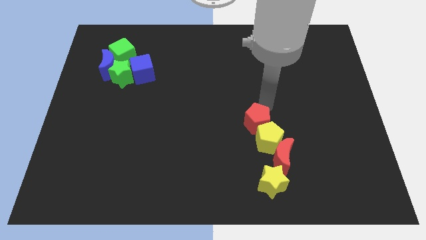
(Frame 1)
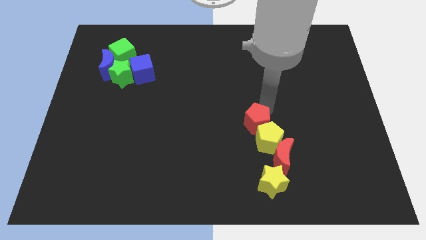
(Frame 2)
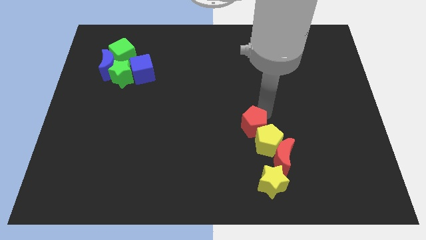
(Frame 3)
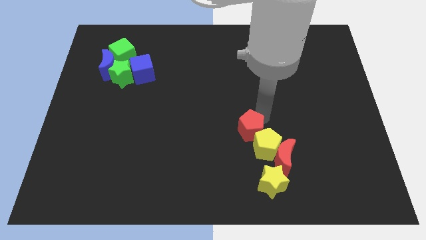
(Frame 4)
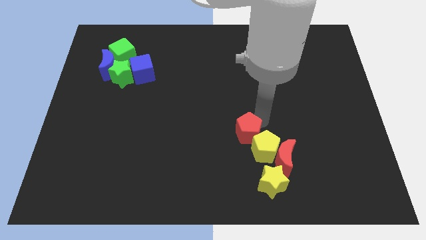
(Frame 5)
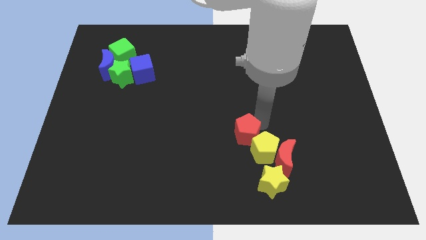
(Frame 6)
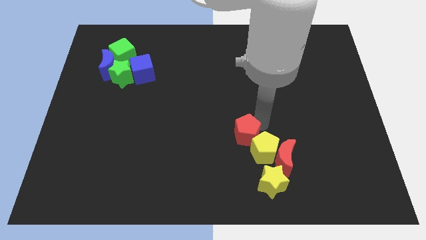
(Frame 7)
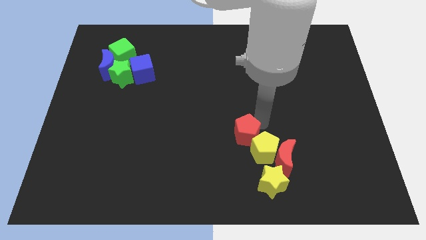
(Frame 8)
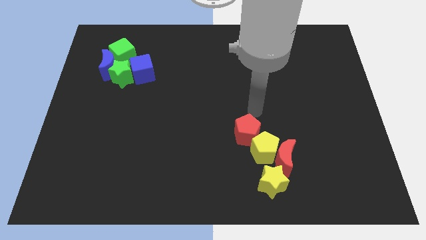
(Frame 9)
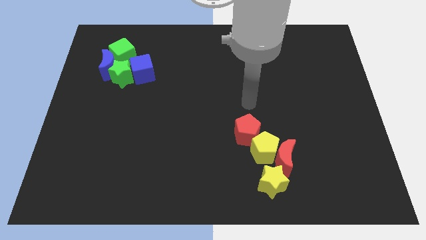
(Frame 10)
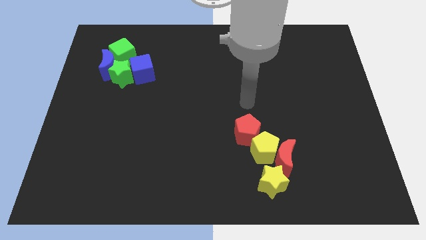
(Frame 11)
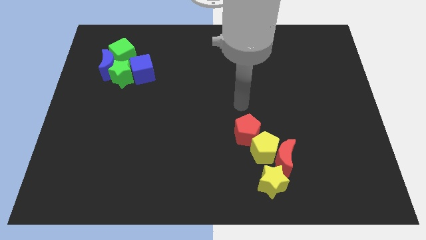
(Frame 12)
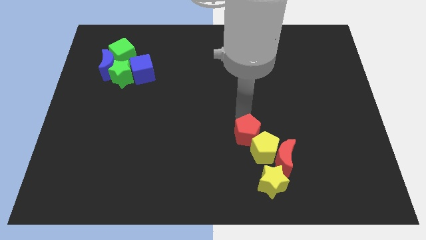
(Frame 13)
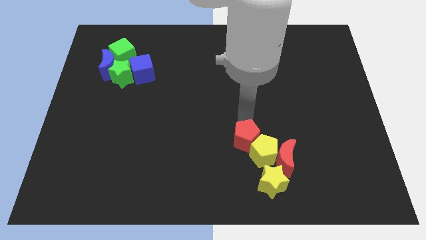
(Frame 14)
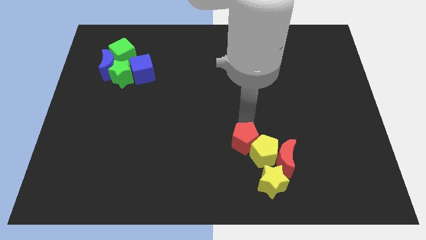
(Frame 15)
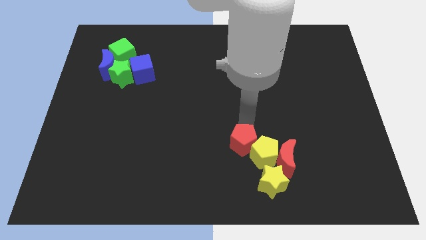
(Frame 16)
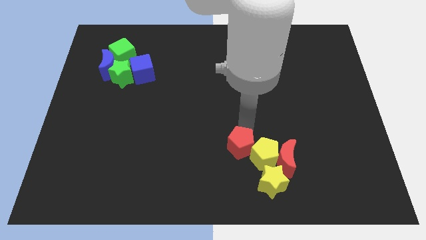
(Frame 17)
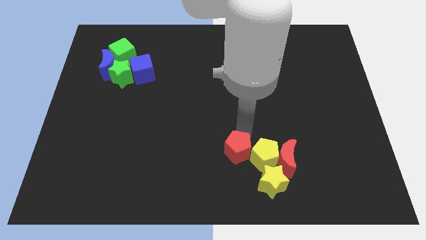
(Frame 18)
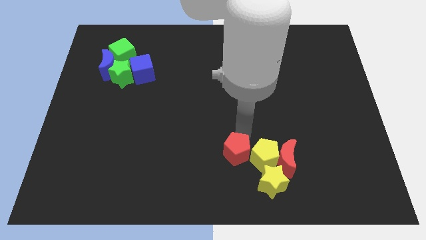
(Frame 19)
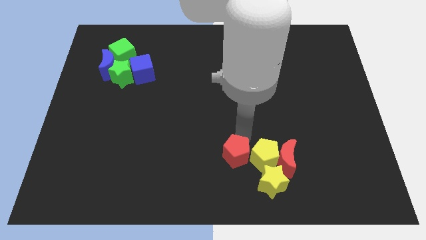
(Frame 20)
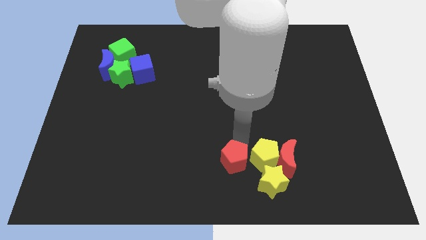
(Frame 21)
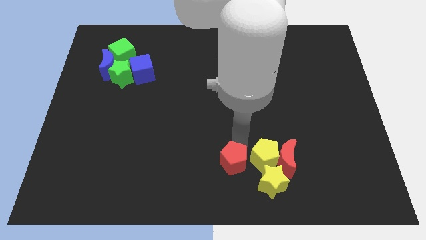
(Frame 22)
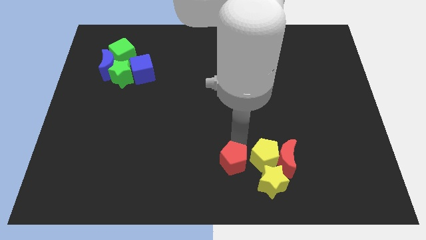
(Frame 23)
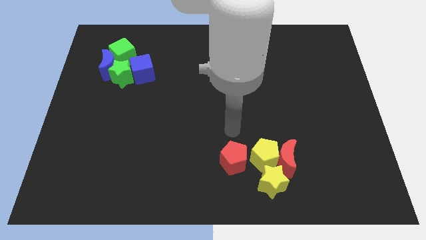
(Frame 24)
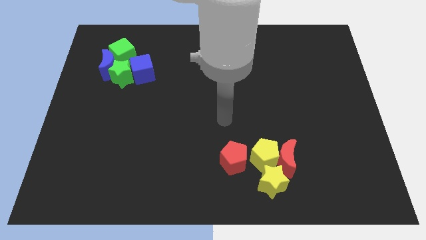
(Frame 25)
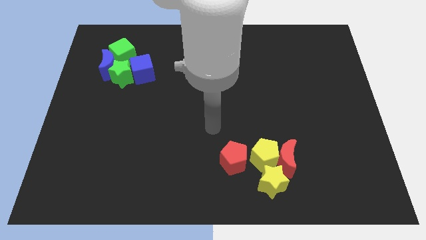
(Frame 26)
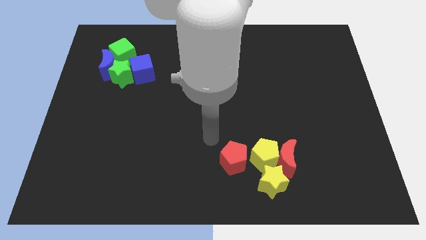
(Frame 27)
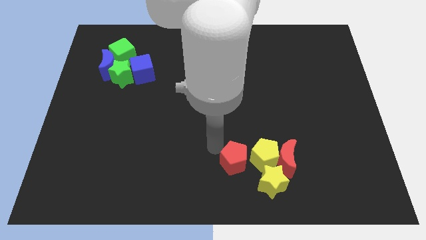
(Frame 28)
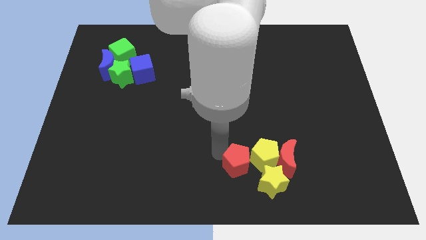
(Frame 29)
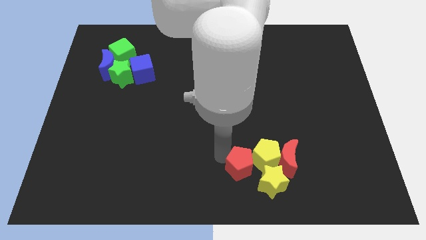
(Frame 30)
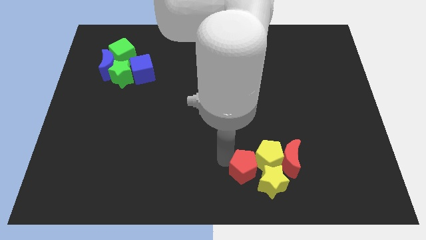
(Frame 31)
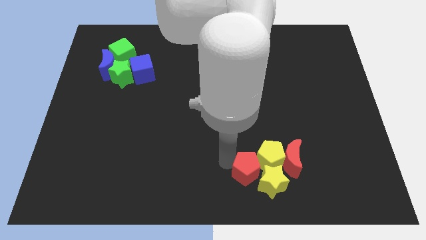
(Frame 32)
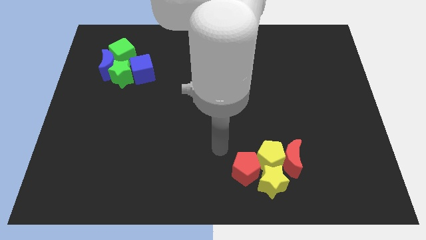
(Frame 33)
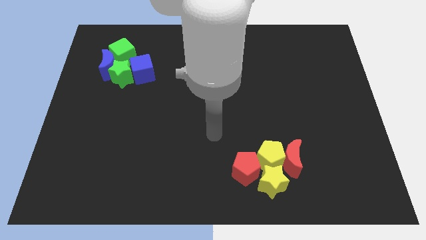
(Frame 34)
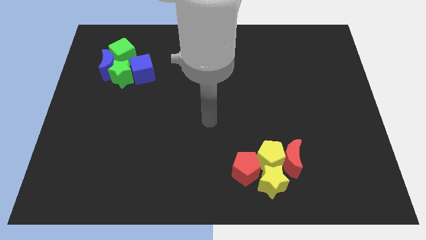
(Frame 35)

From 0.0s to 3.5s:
push the red pentagon to the left middle of yellow pentagon and yellow star

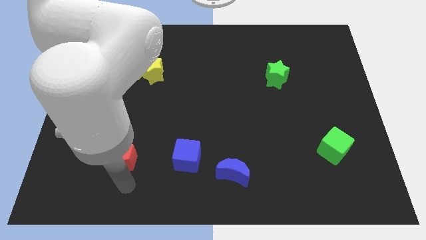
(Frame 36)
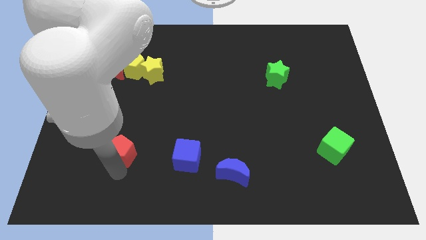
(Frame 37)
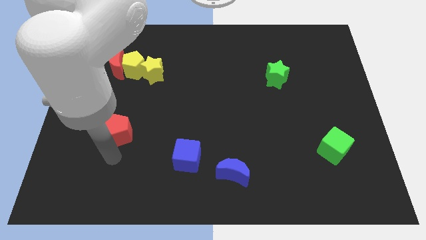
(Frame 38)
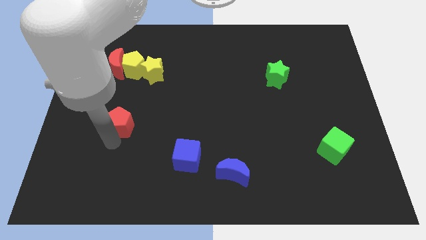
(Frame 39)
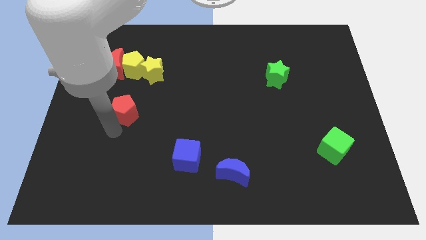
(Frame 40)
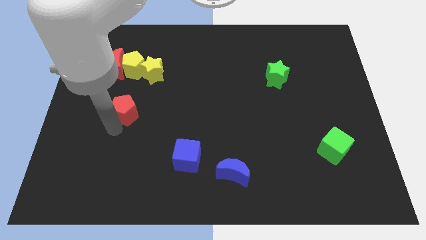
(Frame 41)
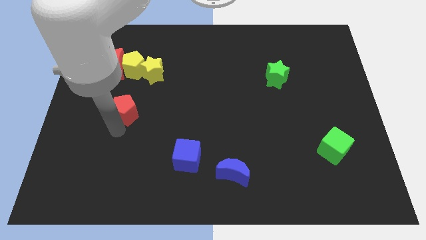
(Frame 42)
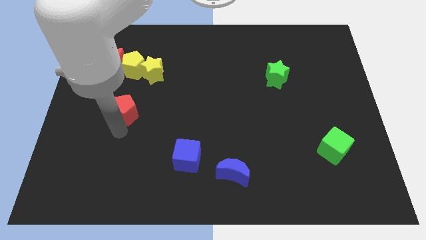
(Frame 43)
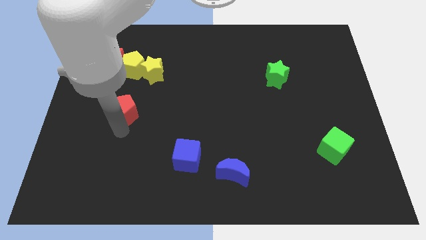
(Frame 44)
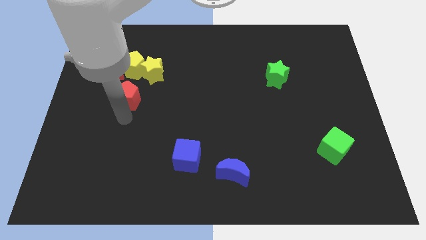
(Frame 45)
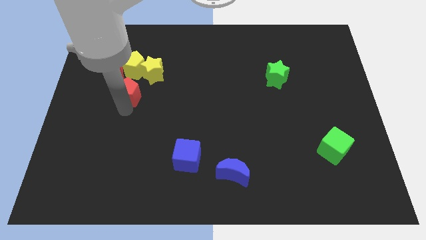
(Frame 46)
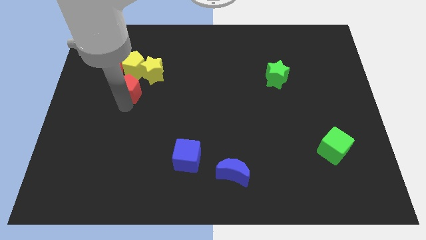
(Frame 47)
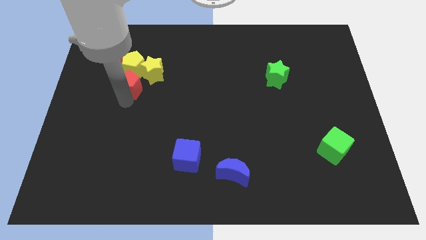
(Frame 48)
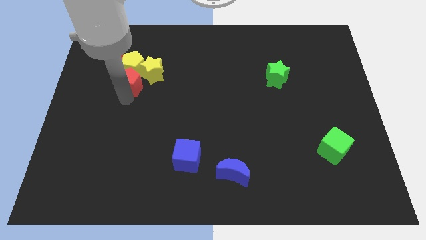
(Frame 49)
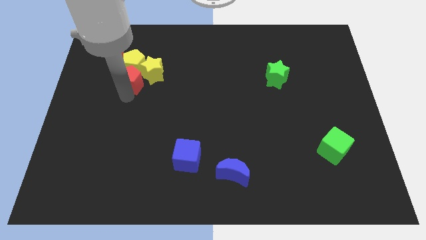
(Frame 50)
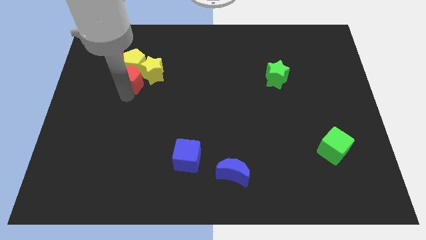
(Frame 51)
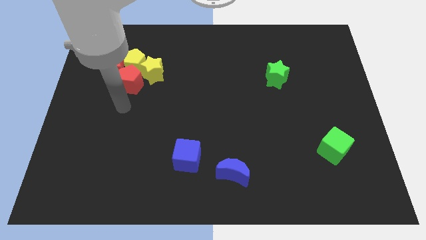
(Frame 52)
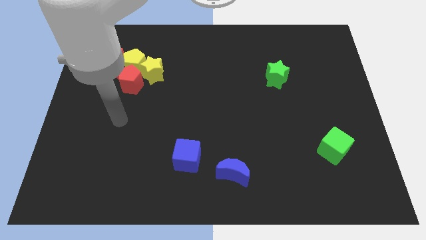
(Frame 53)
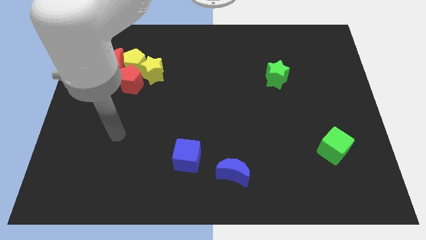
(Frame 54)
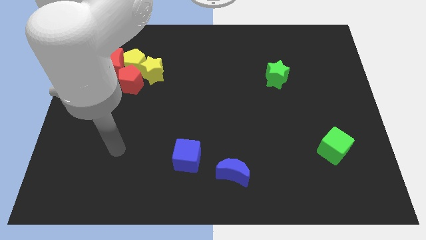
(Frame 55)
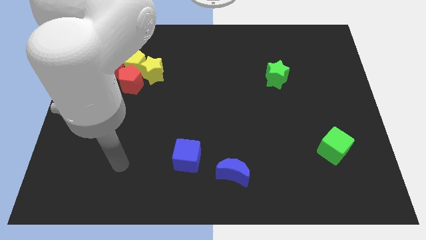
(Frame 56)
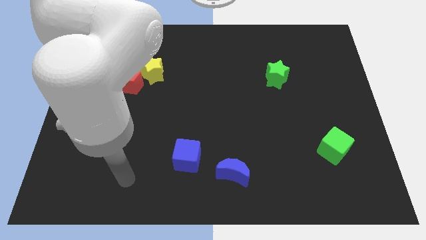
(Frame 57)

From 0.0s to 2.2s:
drag the red pentagon near to the yellow pentagon

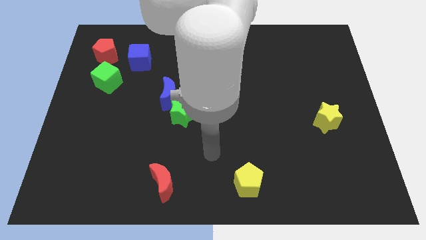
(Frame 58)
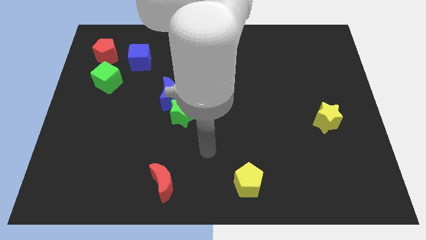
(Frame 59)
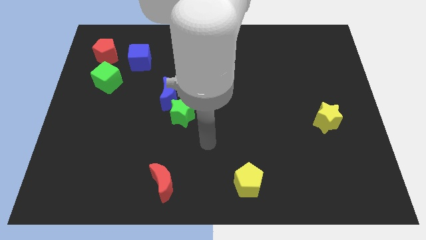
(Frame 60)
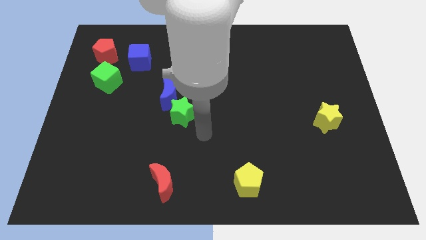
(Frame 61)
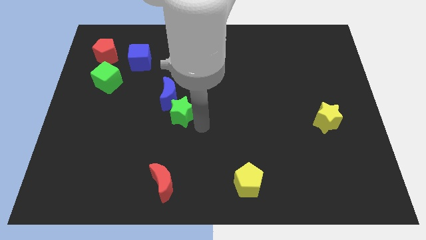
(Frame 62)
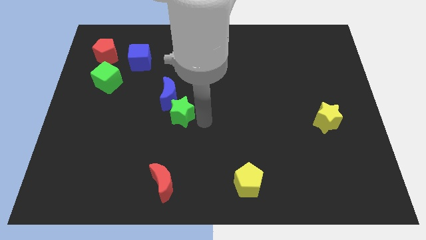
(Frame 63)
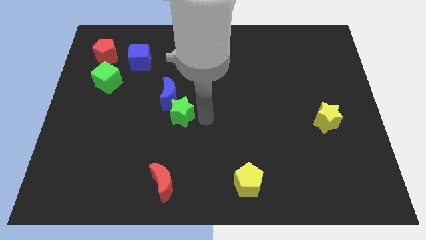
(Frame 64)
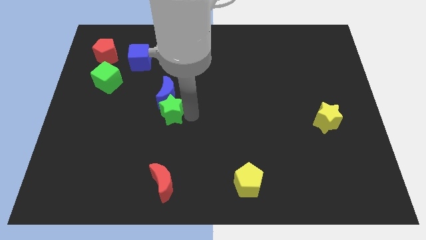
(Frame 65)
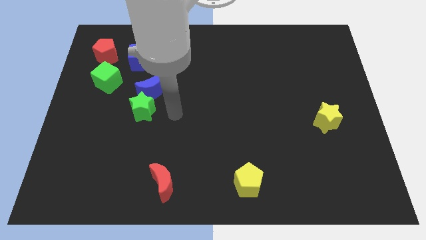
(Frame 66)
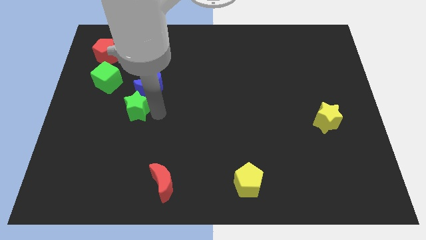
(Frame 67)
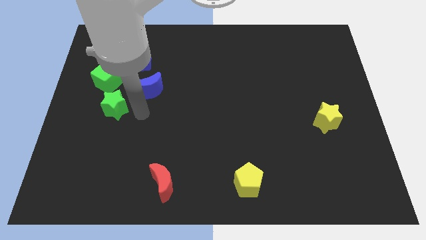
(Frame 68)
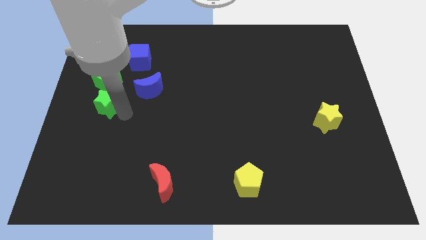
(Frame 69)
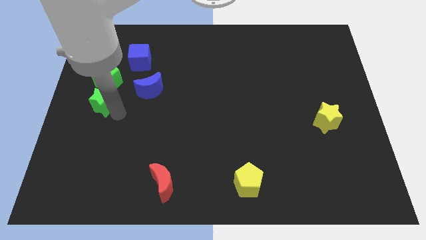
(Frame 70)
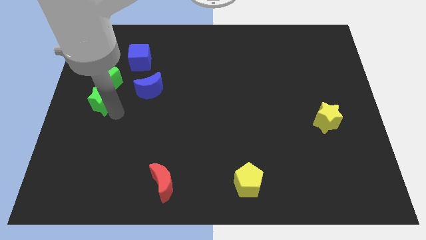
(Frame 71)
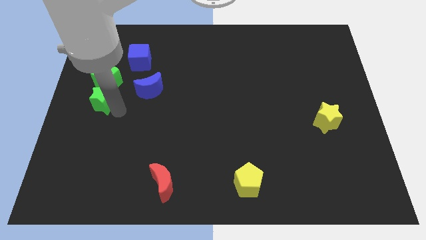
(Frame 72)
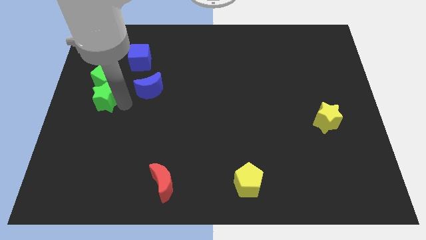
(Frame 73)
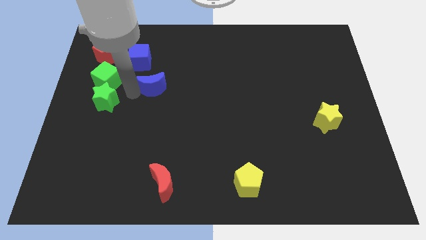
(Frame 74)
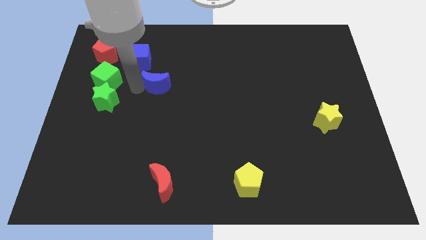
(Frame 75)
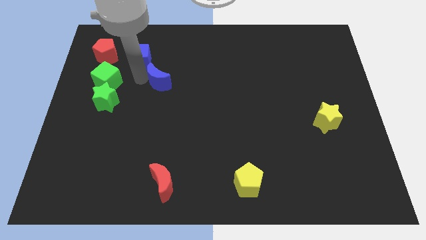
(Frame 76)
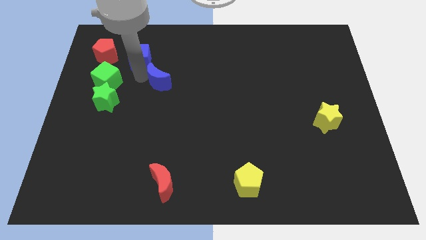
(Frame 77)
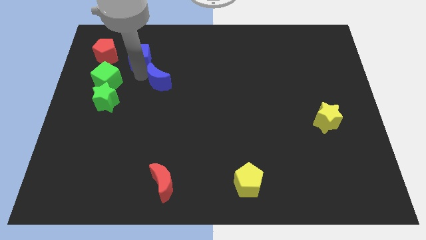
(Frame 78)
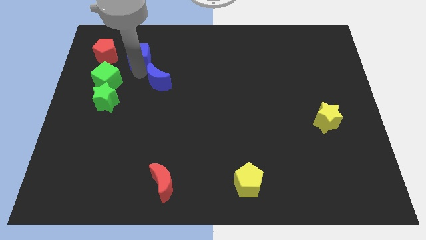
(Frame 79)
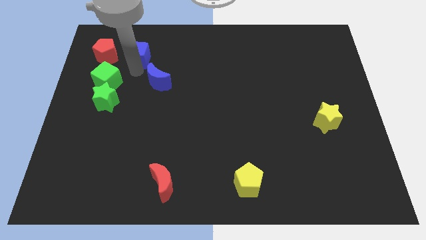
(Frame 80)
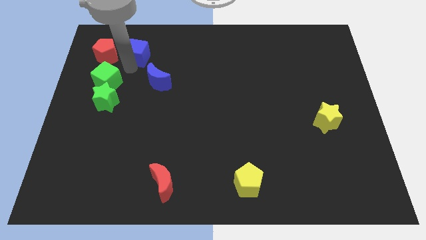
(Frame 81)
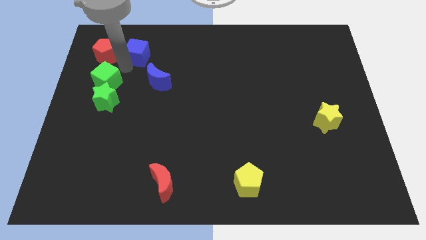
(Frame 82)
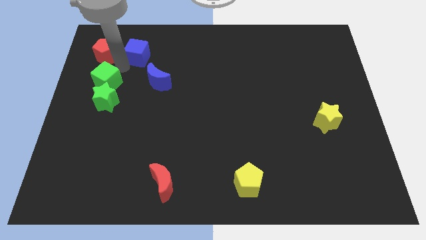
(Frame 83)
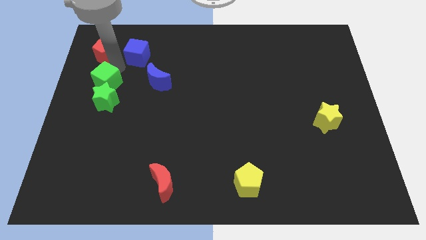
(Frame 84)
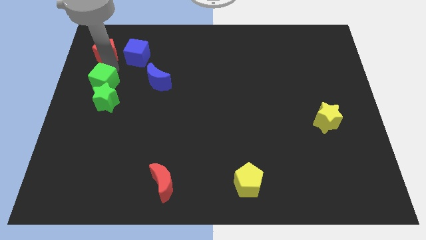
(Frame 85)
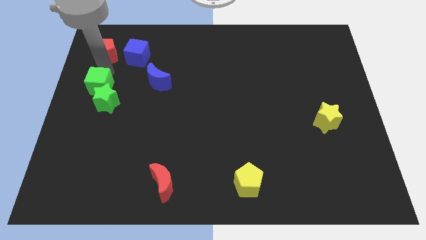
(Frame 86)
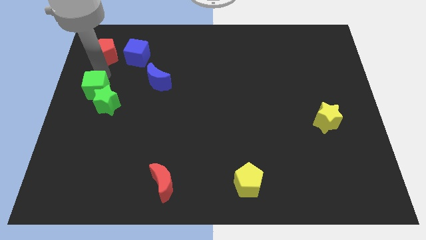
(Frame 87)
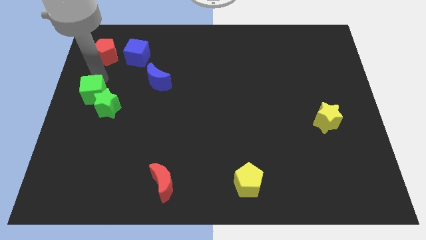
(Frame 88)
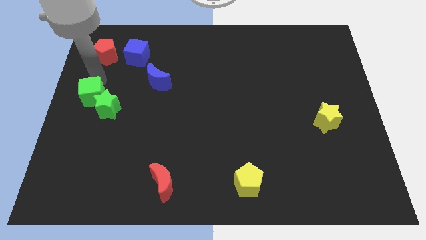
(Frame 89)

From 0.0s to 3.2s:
move the green star diagonally to the top left of the red moon
